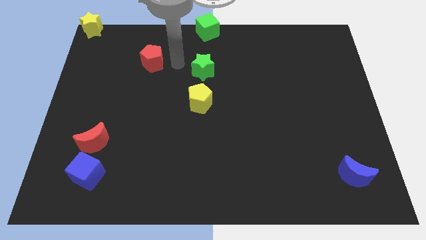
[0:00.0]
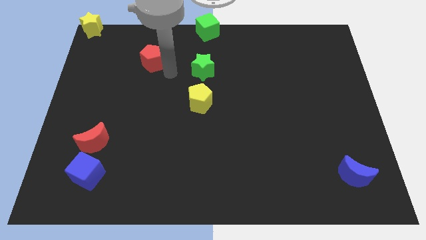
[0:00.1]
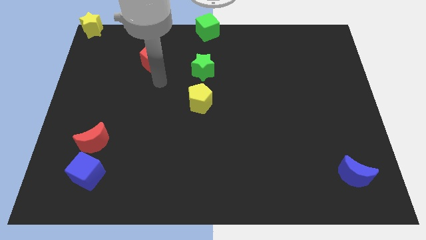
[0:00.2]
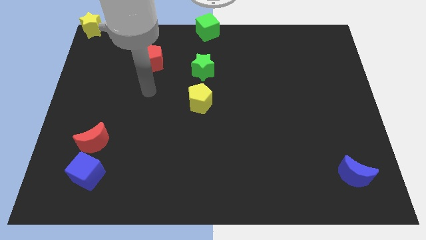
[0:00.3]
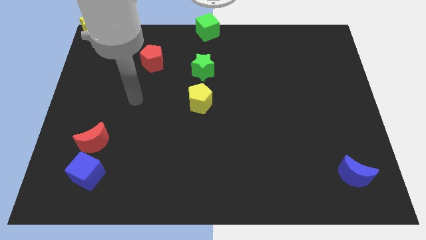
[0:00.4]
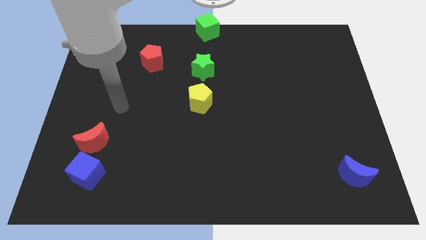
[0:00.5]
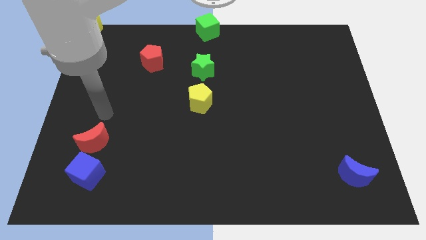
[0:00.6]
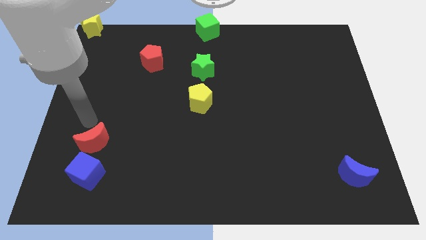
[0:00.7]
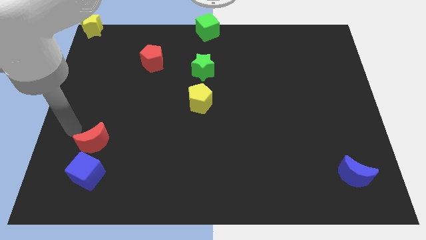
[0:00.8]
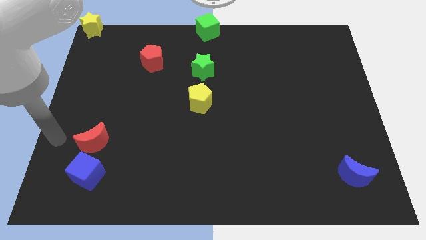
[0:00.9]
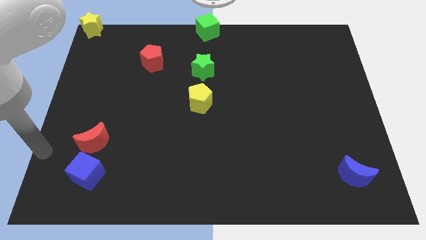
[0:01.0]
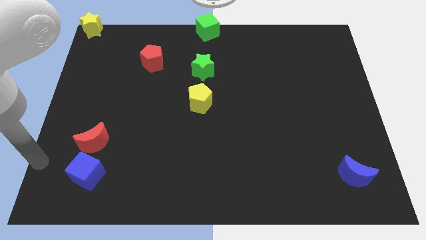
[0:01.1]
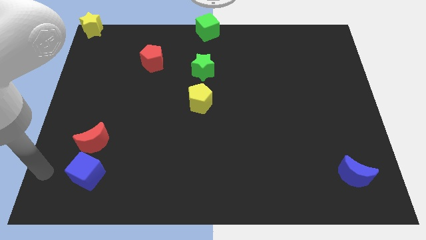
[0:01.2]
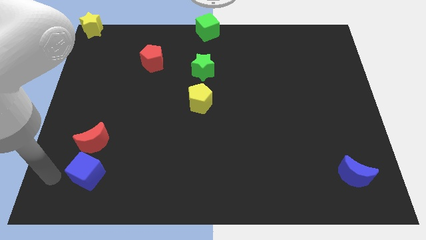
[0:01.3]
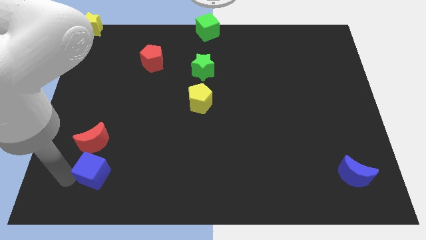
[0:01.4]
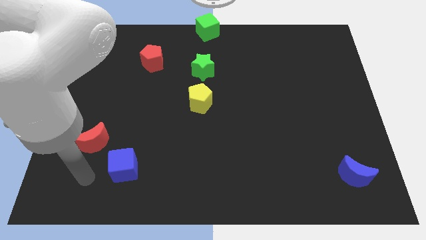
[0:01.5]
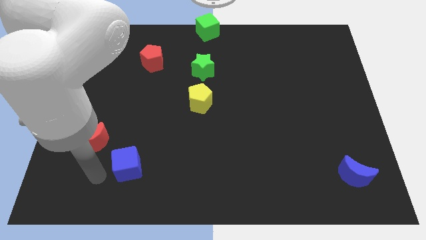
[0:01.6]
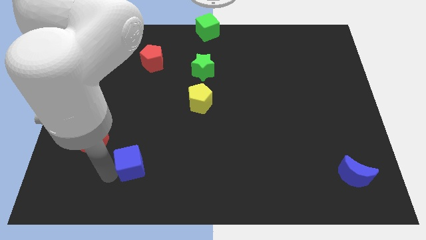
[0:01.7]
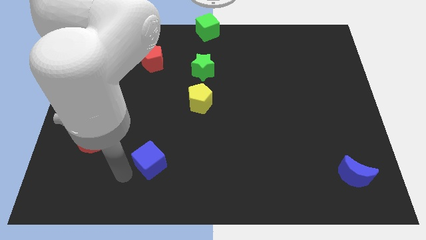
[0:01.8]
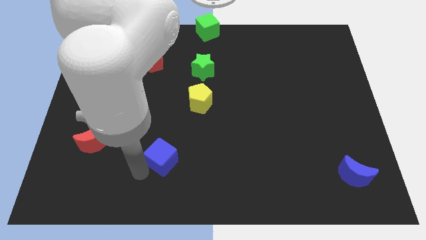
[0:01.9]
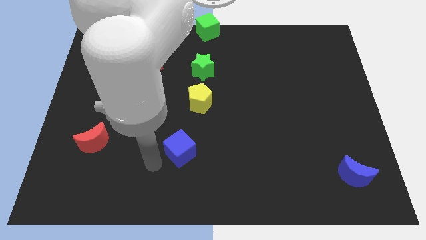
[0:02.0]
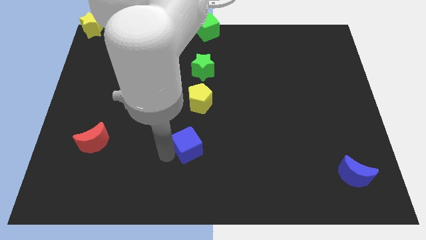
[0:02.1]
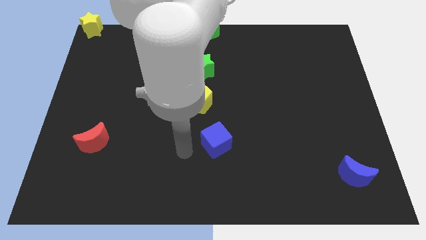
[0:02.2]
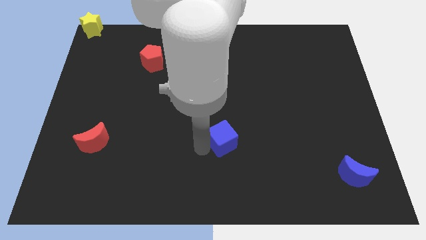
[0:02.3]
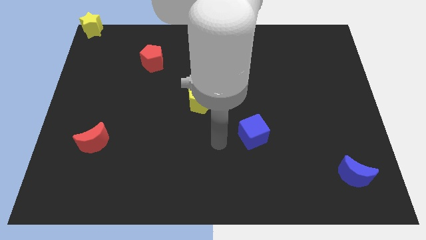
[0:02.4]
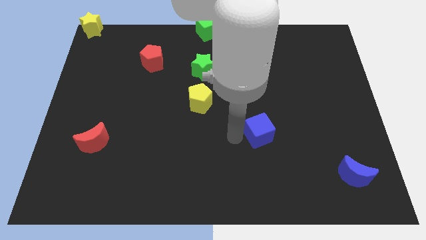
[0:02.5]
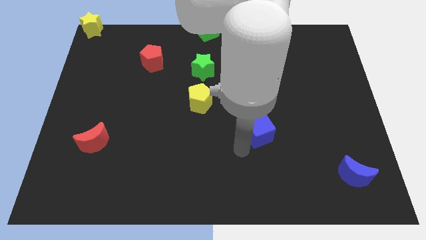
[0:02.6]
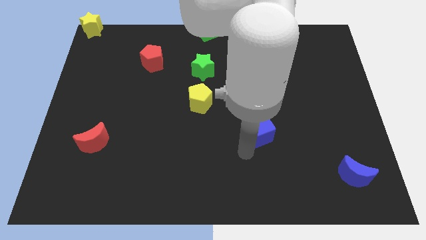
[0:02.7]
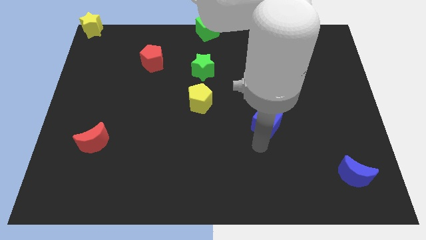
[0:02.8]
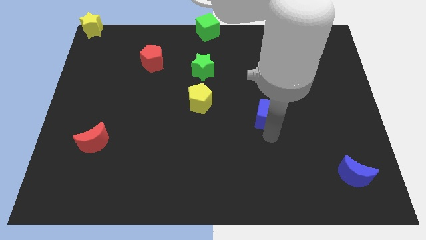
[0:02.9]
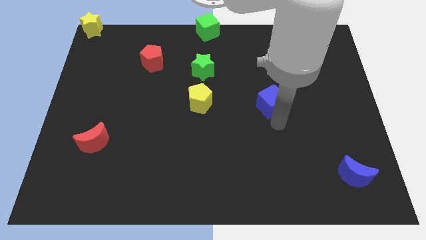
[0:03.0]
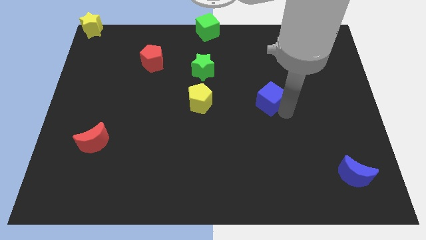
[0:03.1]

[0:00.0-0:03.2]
move the blue cube to the right of yellow pentagon

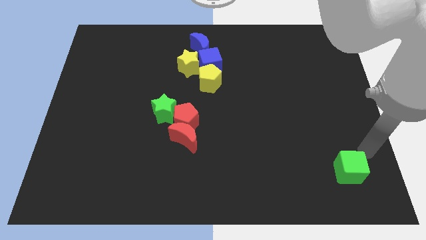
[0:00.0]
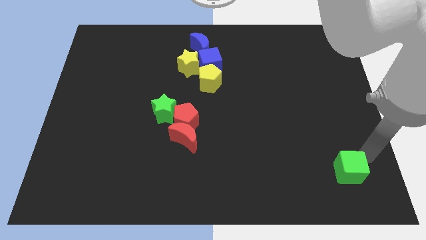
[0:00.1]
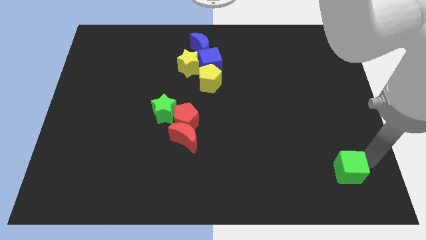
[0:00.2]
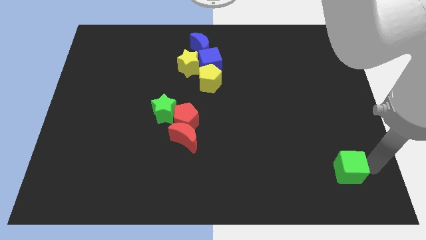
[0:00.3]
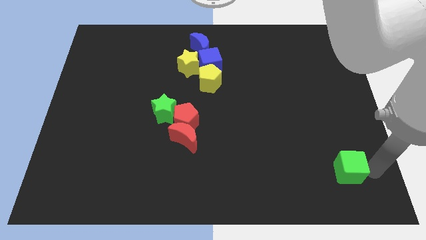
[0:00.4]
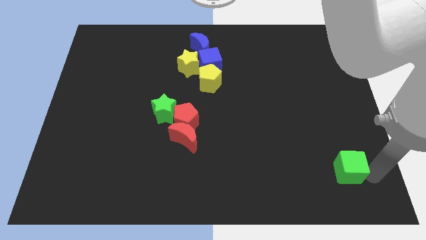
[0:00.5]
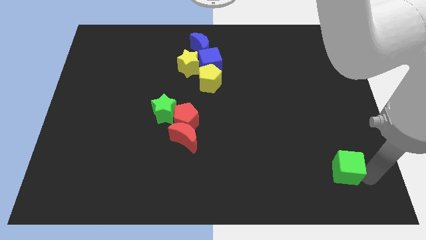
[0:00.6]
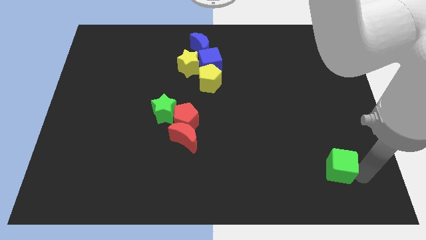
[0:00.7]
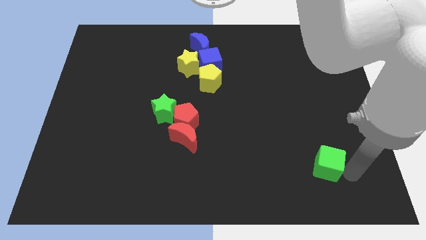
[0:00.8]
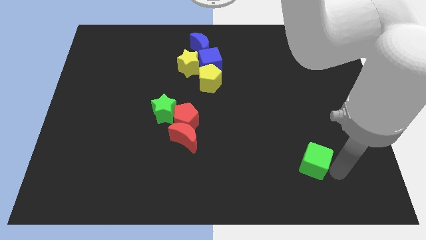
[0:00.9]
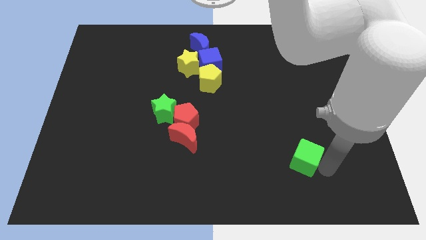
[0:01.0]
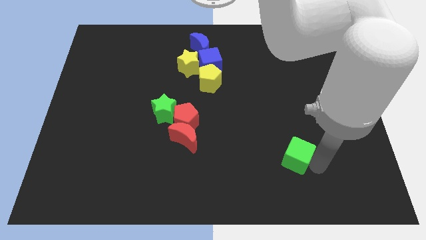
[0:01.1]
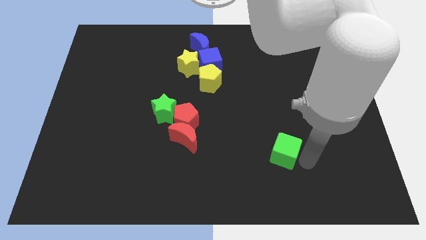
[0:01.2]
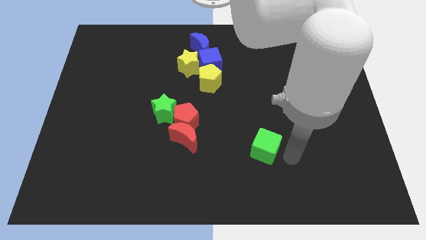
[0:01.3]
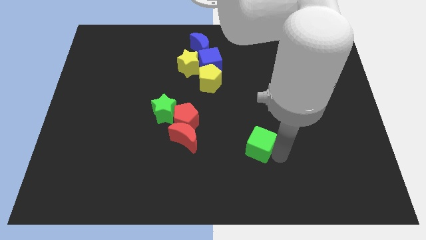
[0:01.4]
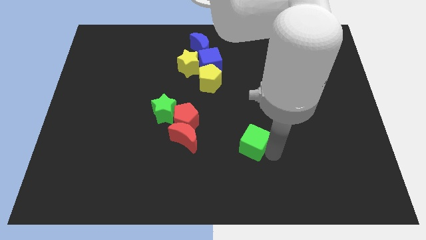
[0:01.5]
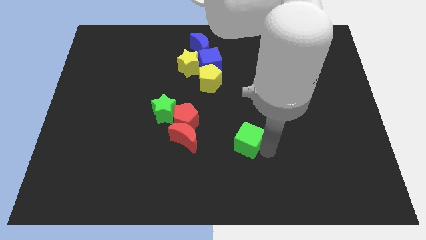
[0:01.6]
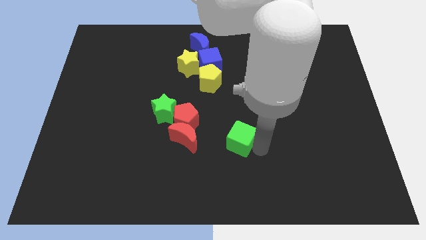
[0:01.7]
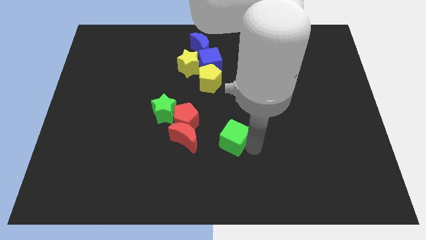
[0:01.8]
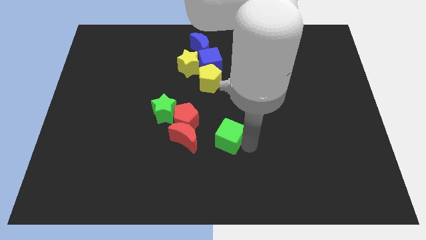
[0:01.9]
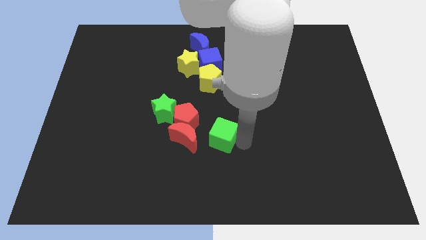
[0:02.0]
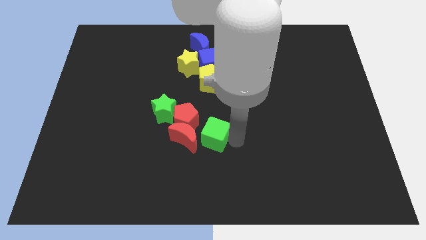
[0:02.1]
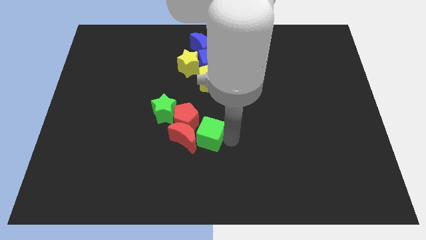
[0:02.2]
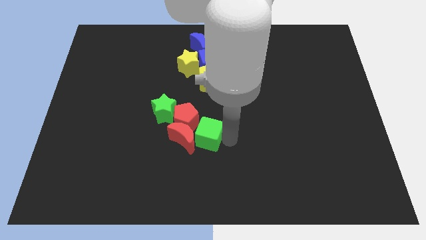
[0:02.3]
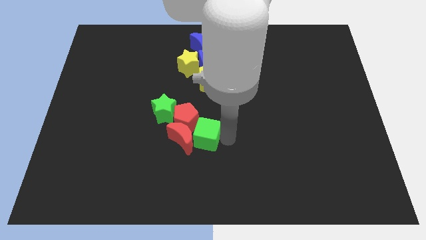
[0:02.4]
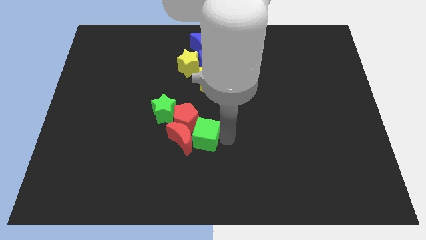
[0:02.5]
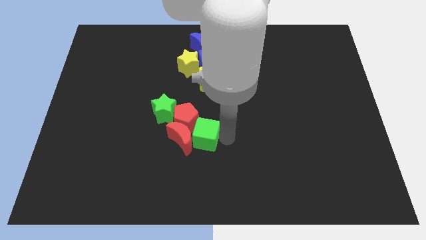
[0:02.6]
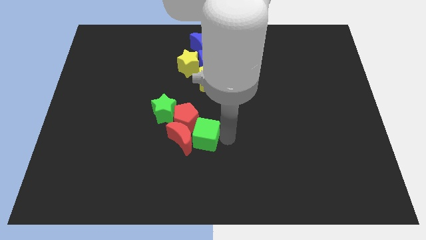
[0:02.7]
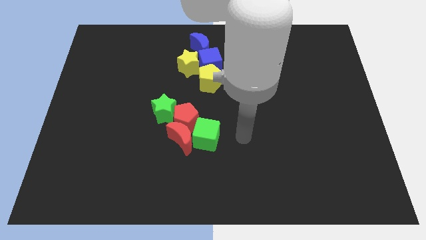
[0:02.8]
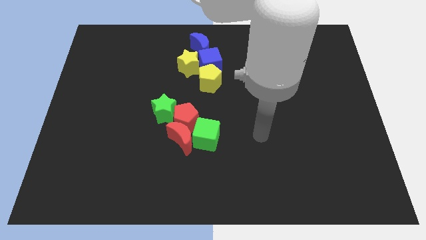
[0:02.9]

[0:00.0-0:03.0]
place the green cube into red blocks to the right

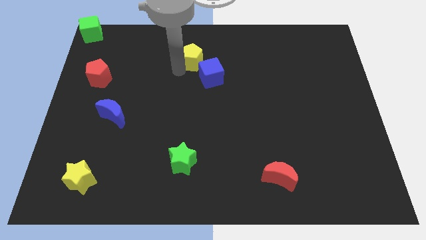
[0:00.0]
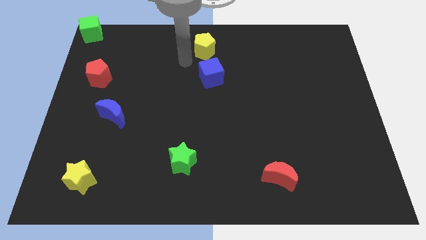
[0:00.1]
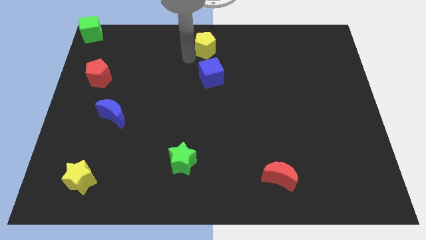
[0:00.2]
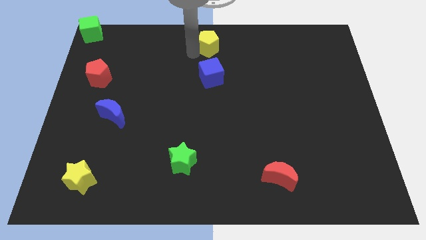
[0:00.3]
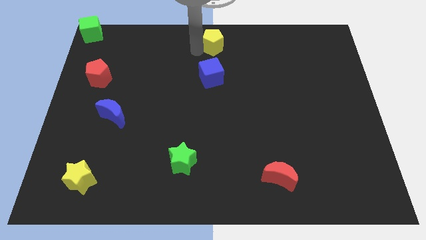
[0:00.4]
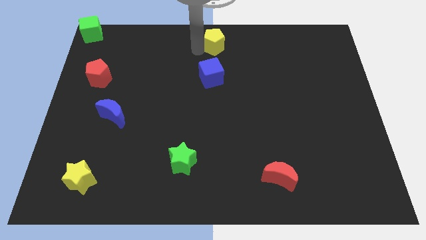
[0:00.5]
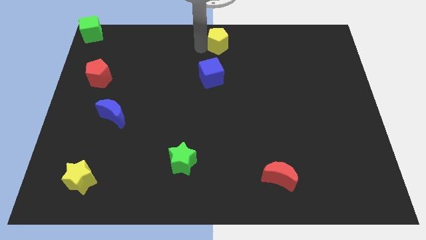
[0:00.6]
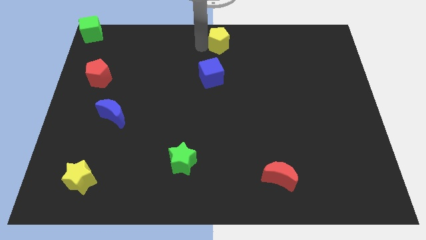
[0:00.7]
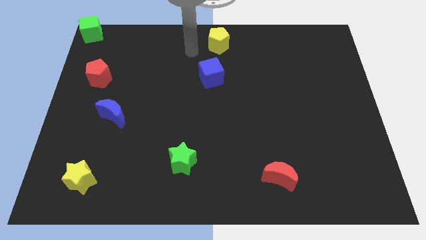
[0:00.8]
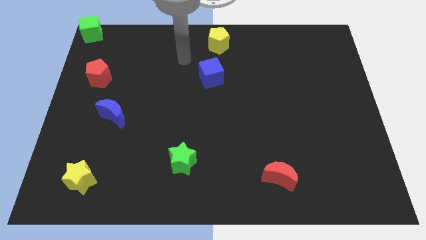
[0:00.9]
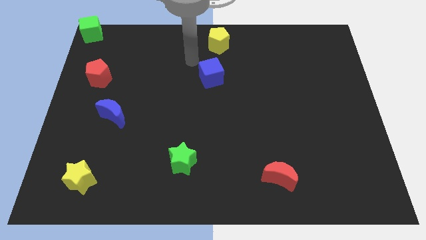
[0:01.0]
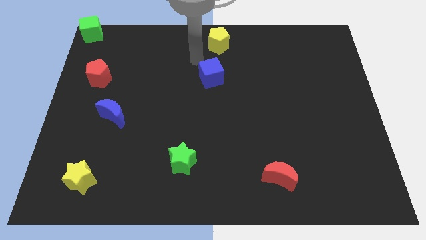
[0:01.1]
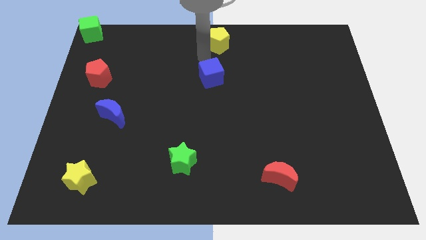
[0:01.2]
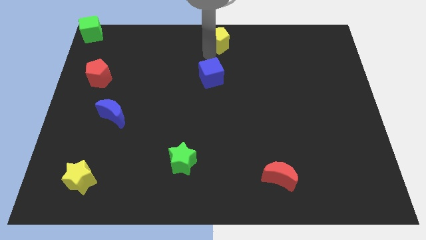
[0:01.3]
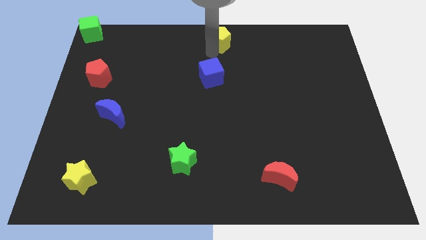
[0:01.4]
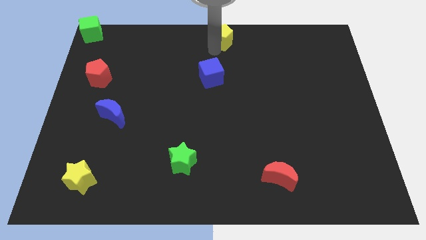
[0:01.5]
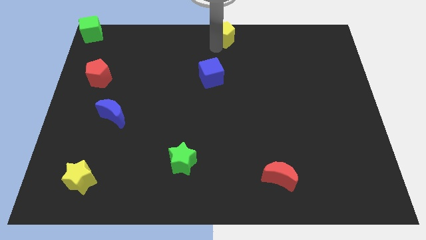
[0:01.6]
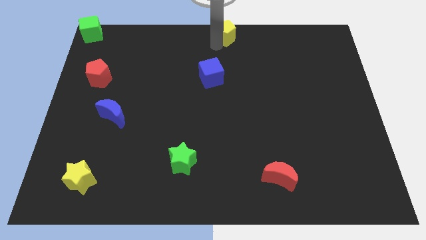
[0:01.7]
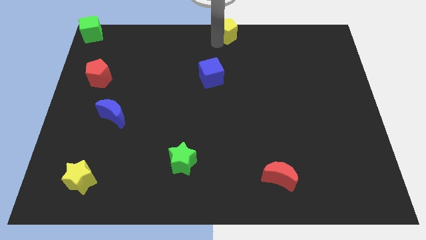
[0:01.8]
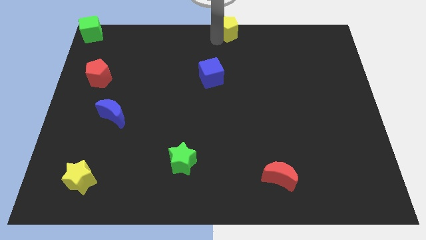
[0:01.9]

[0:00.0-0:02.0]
move the yellow pentagon to the top center of the board

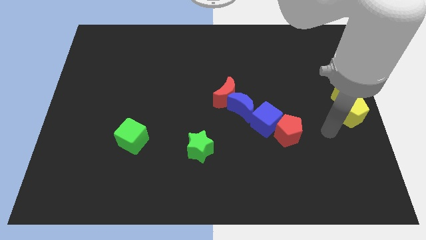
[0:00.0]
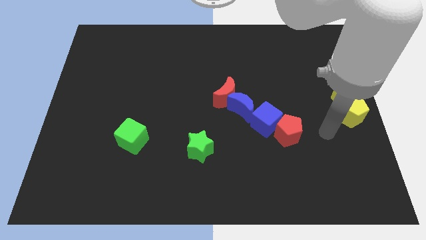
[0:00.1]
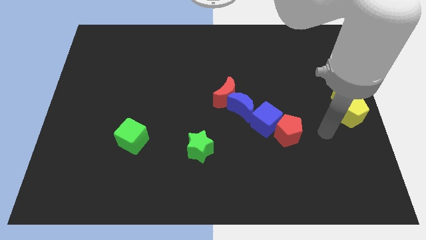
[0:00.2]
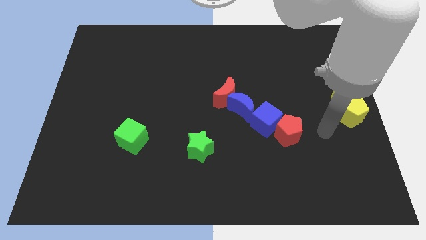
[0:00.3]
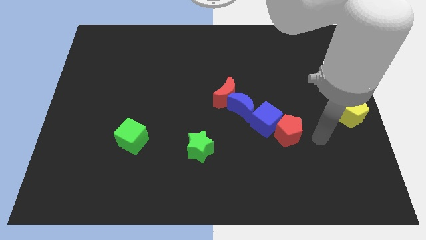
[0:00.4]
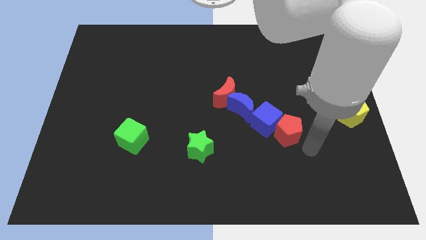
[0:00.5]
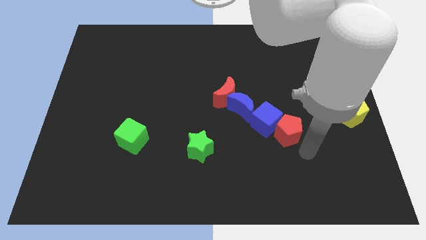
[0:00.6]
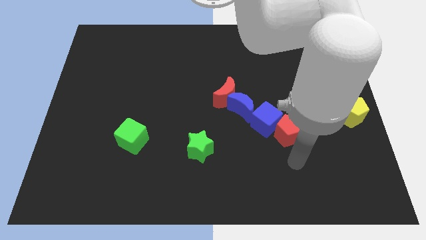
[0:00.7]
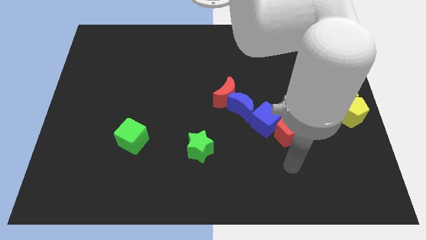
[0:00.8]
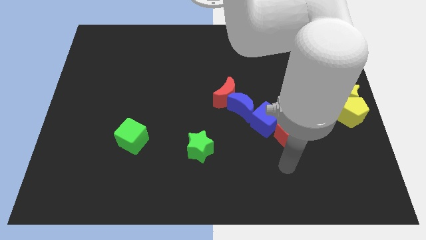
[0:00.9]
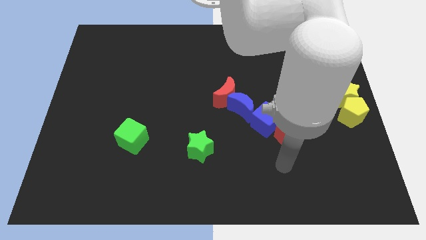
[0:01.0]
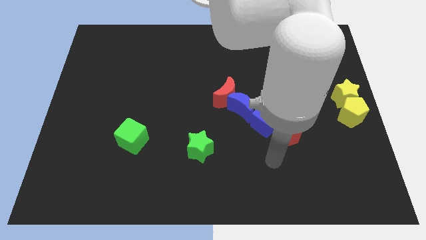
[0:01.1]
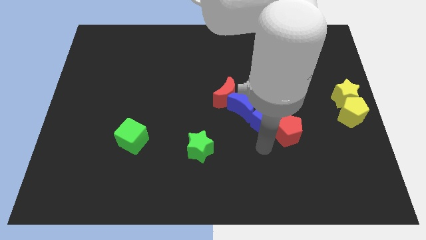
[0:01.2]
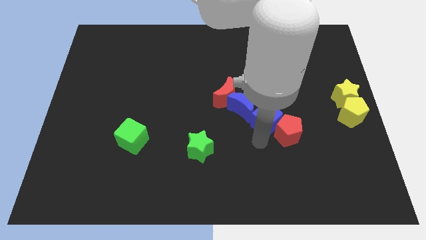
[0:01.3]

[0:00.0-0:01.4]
move your arm away from yellow pentagon
